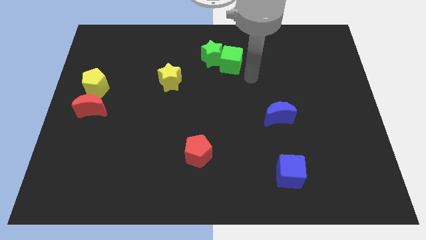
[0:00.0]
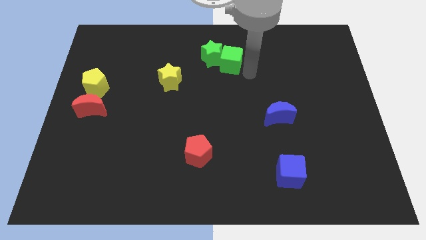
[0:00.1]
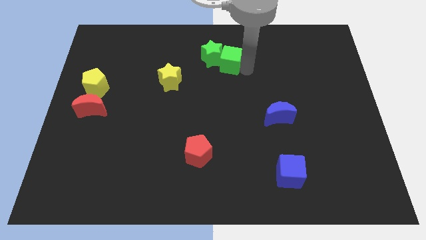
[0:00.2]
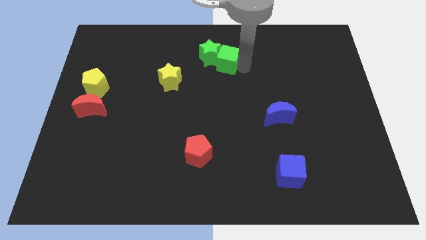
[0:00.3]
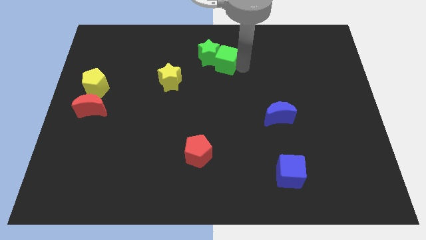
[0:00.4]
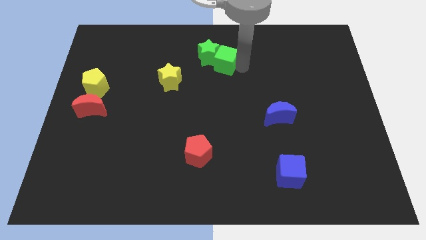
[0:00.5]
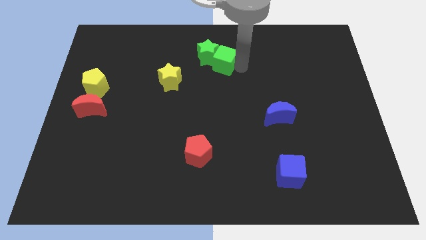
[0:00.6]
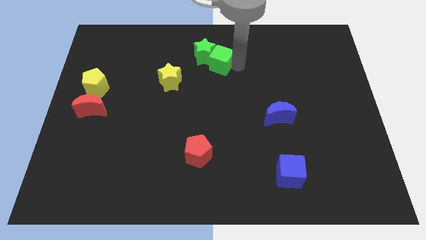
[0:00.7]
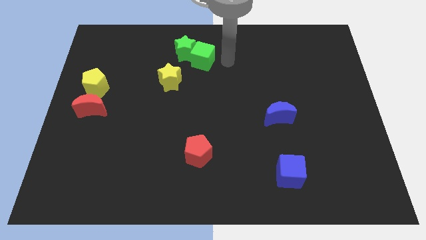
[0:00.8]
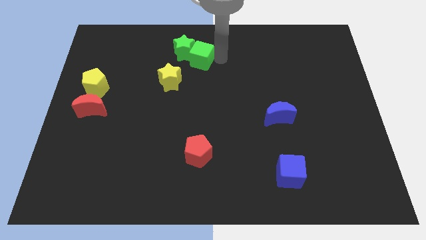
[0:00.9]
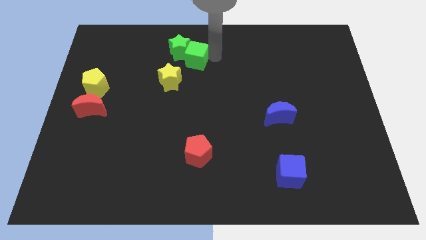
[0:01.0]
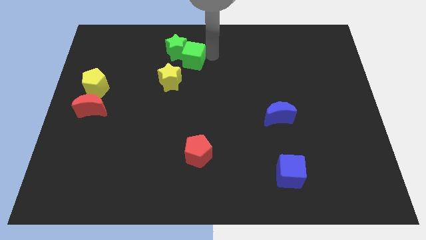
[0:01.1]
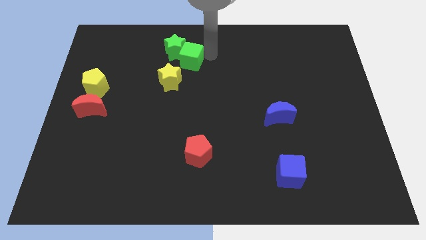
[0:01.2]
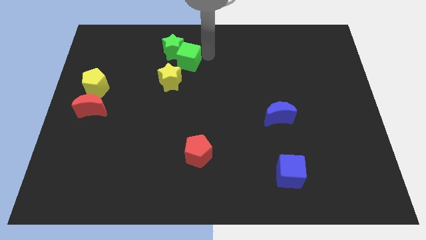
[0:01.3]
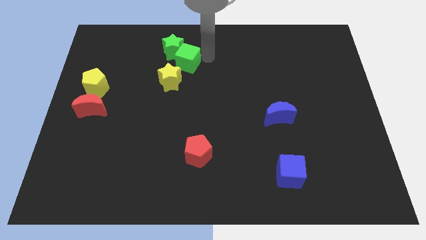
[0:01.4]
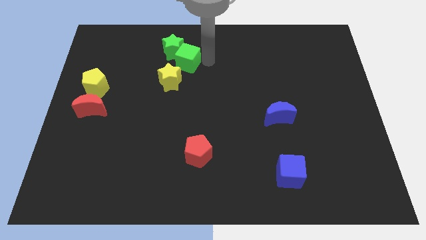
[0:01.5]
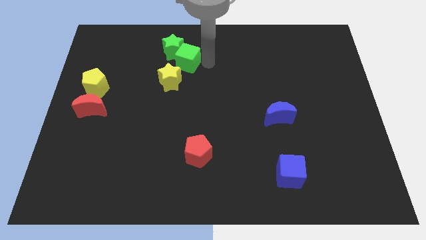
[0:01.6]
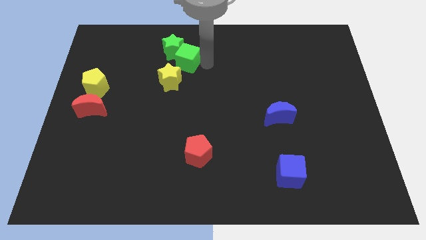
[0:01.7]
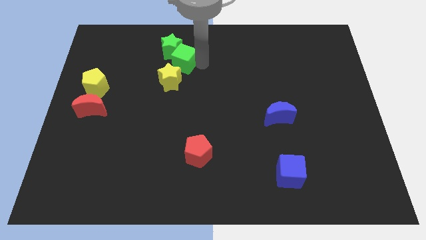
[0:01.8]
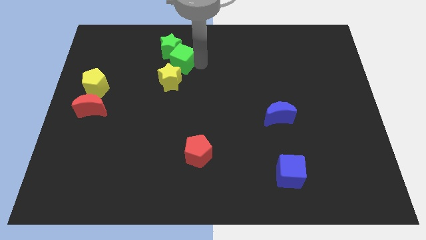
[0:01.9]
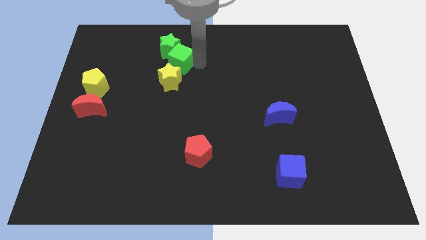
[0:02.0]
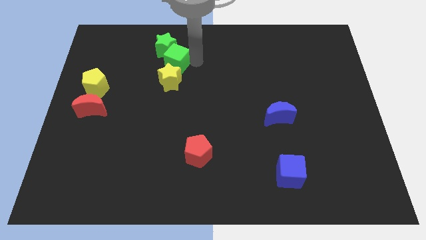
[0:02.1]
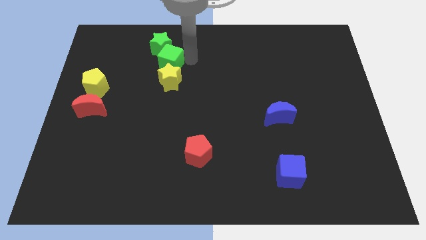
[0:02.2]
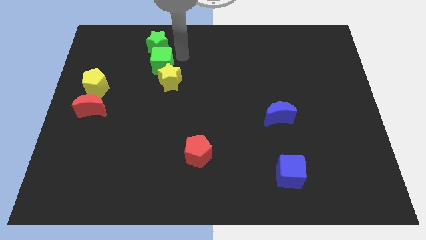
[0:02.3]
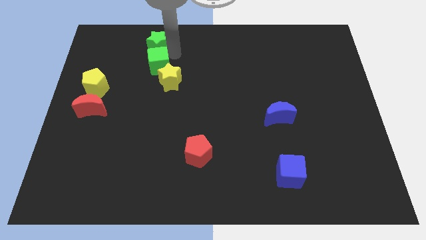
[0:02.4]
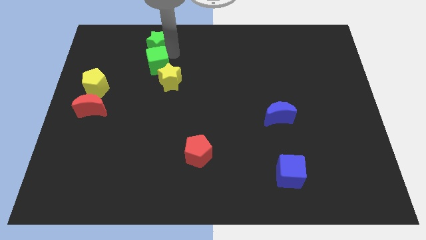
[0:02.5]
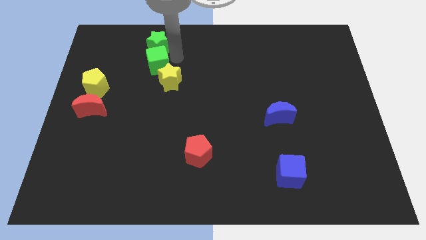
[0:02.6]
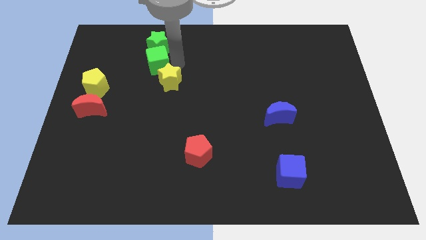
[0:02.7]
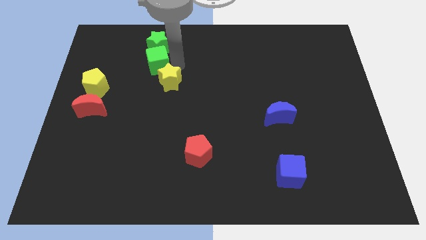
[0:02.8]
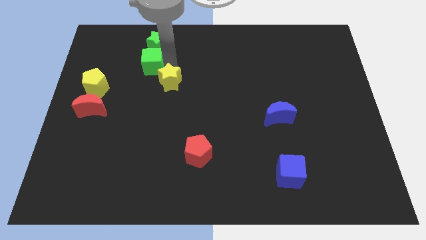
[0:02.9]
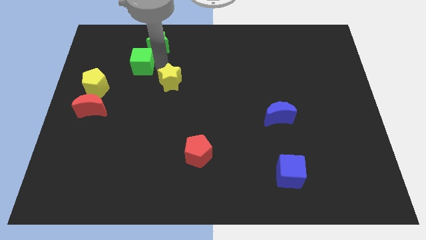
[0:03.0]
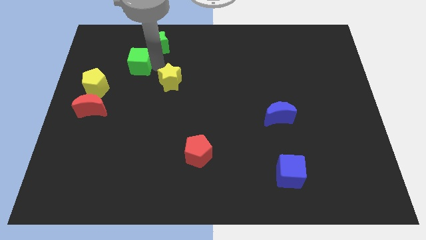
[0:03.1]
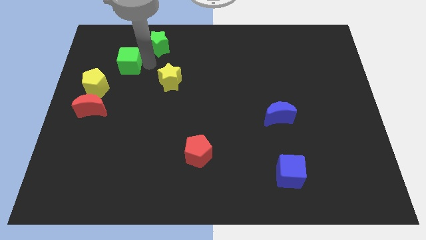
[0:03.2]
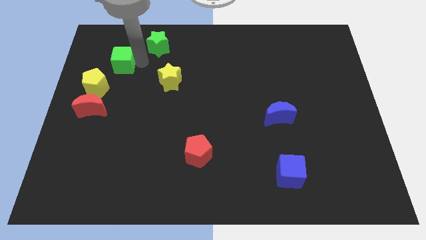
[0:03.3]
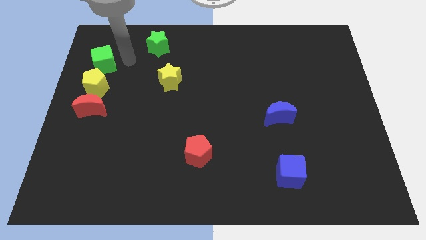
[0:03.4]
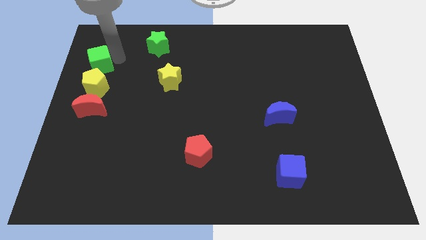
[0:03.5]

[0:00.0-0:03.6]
slide green cube above yellow pentagon

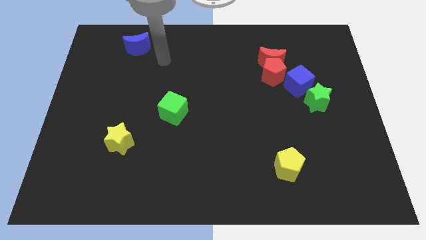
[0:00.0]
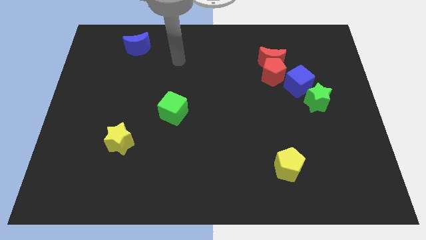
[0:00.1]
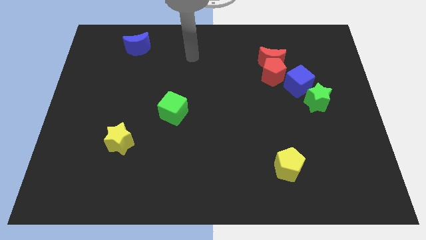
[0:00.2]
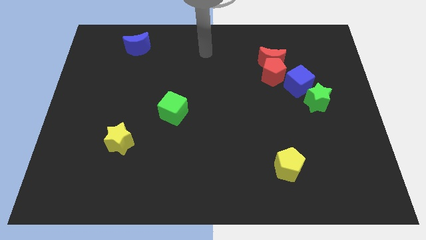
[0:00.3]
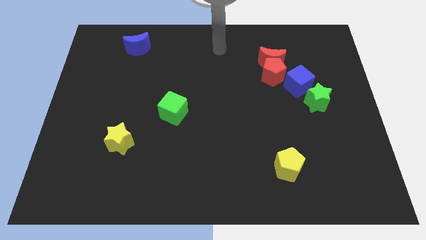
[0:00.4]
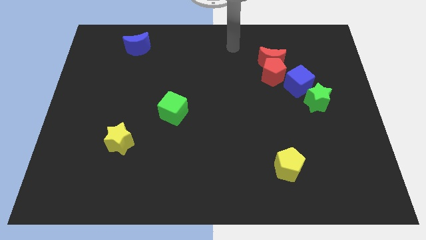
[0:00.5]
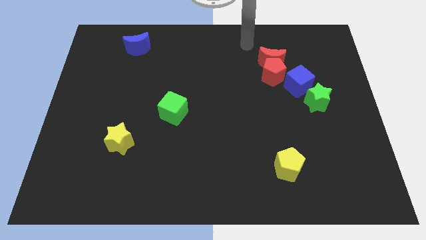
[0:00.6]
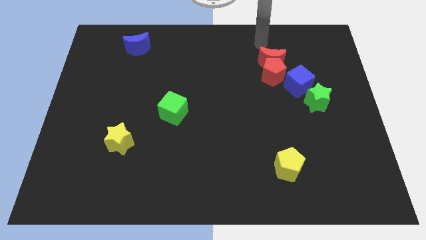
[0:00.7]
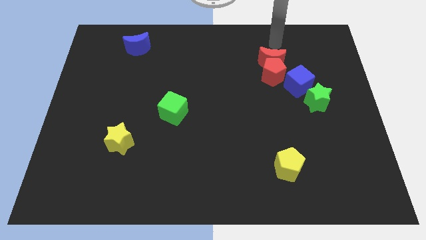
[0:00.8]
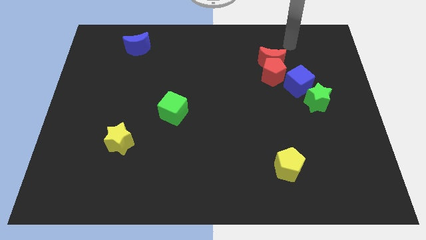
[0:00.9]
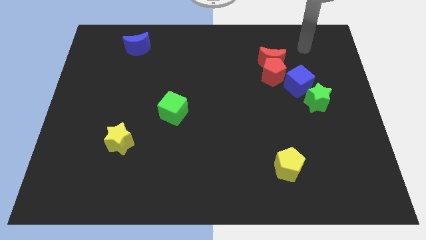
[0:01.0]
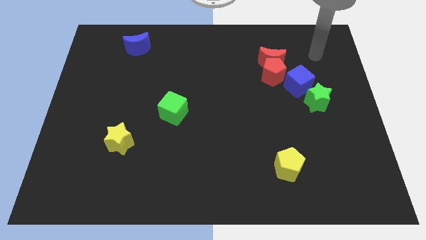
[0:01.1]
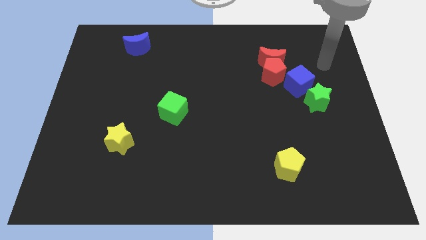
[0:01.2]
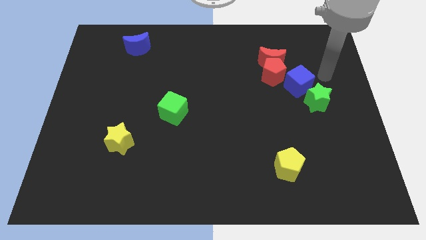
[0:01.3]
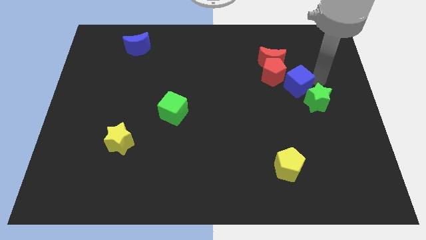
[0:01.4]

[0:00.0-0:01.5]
move your arm to the right of the blue cube

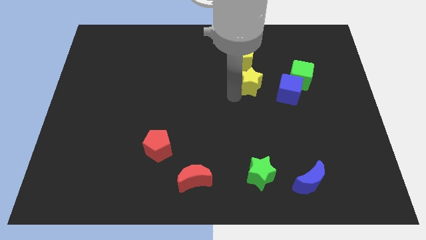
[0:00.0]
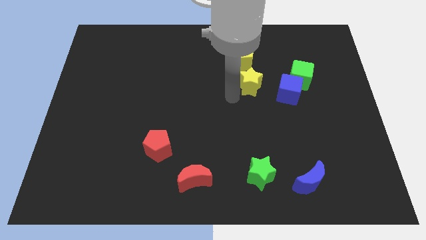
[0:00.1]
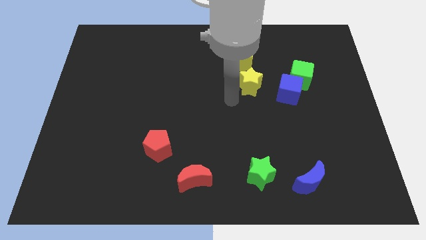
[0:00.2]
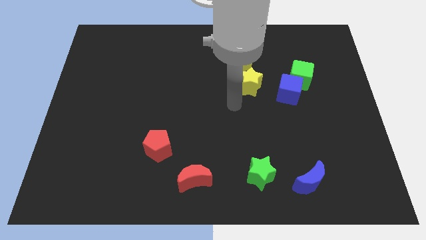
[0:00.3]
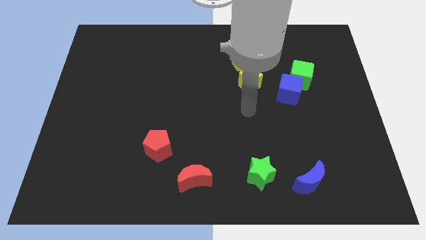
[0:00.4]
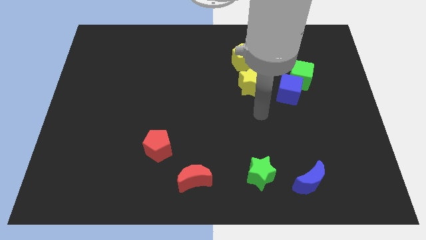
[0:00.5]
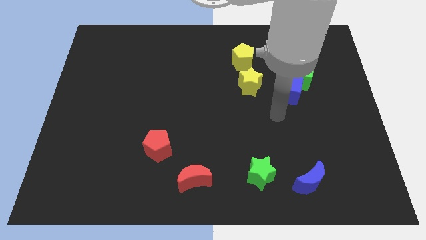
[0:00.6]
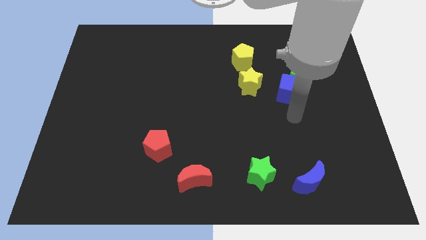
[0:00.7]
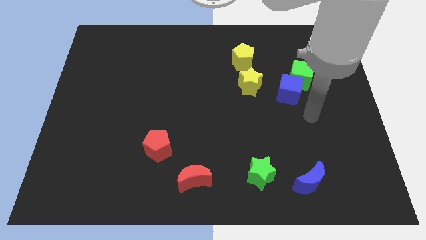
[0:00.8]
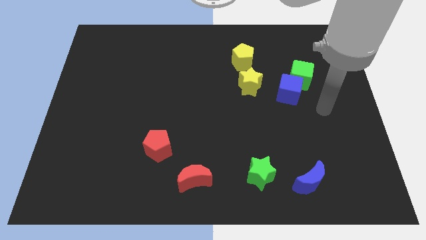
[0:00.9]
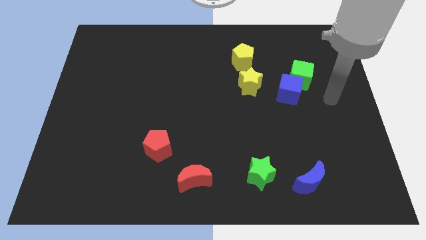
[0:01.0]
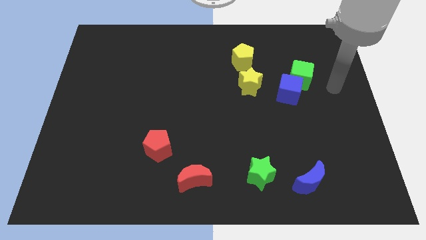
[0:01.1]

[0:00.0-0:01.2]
move your arm towards center right

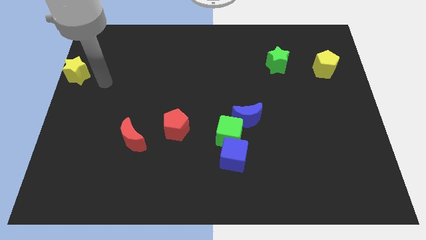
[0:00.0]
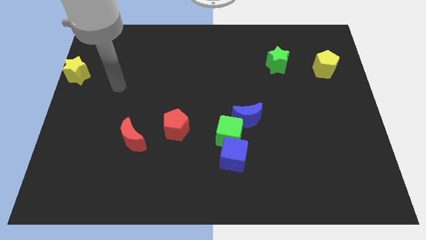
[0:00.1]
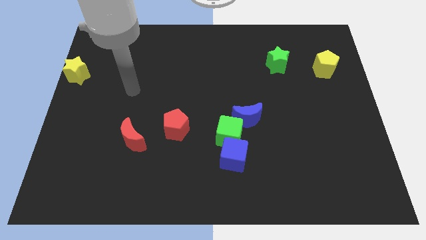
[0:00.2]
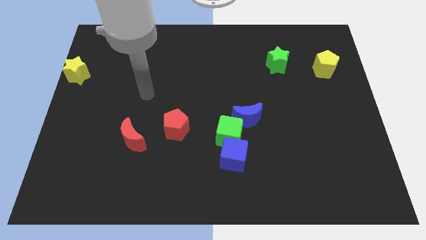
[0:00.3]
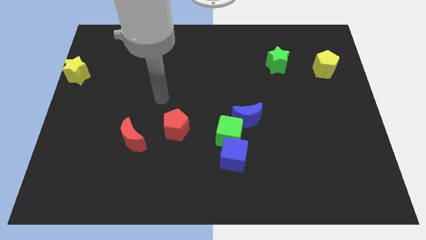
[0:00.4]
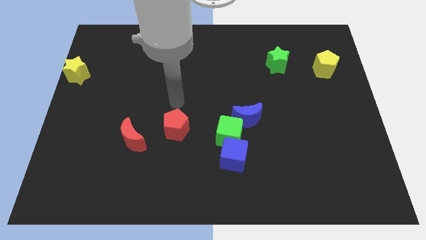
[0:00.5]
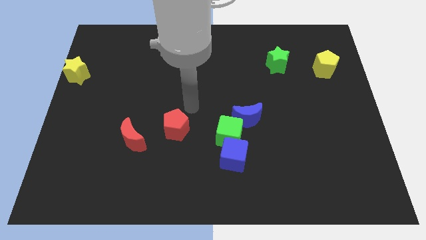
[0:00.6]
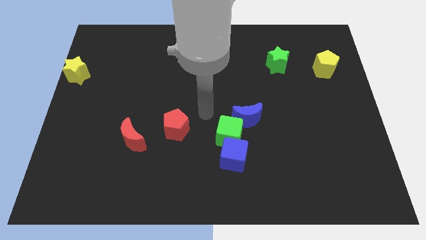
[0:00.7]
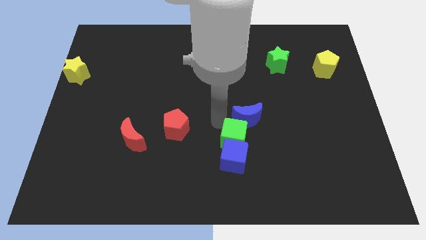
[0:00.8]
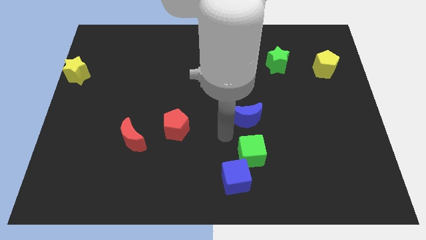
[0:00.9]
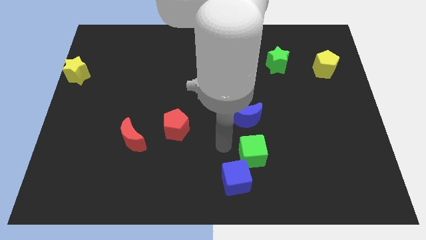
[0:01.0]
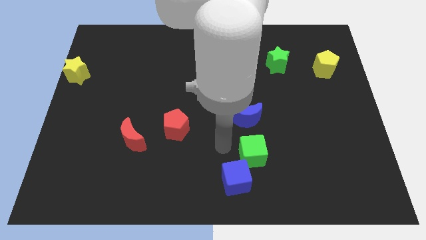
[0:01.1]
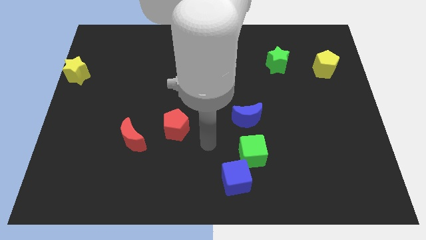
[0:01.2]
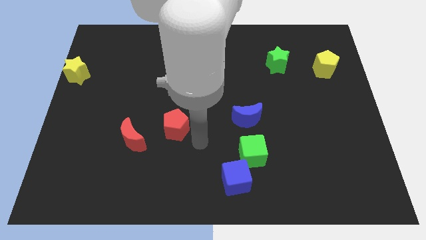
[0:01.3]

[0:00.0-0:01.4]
push the blue cube with the green cube

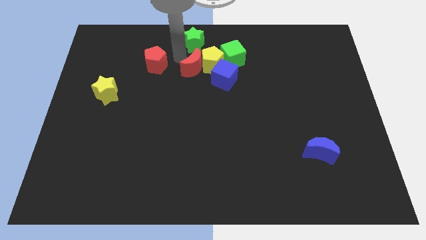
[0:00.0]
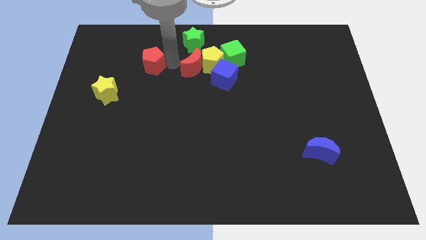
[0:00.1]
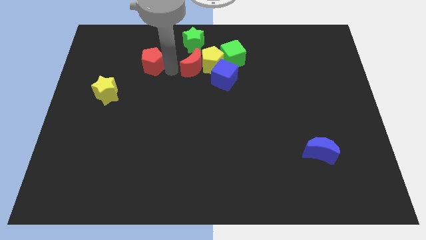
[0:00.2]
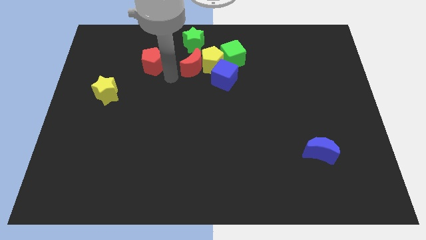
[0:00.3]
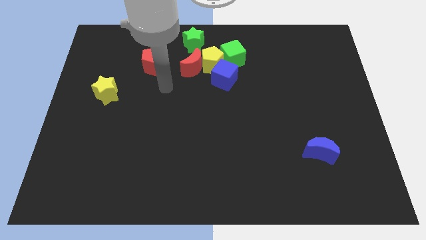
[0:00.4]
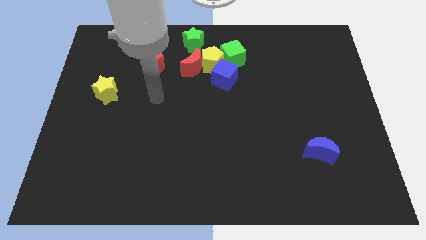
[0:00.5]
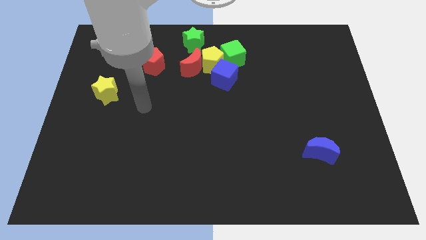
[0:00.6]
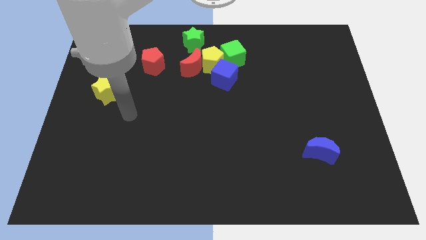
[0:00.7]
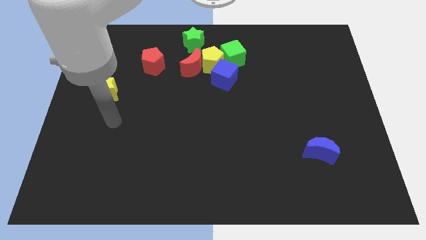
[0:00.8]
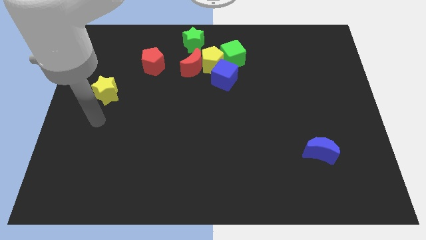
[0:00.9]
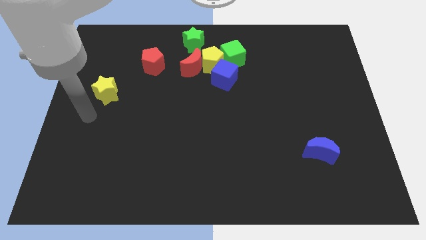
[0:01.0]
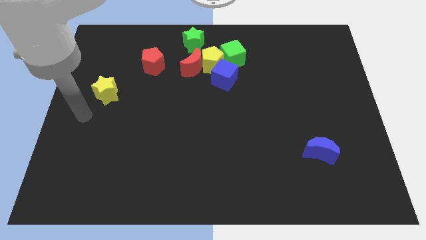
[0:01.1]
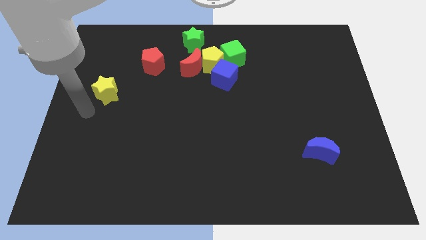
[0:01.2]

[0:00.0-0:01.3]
move the arm to the bottom left of the yellow star

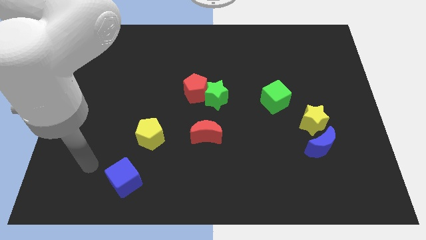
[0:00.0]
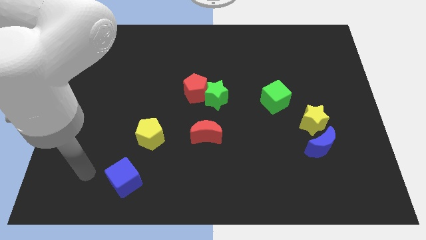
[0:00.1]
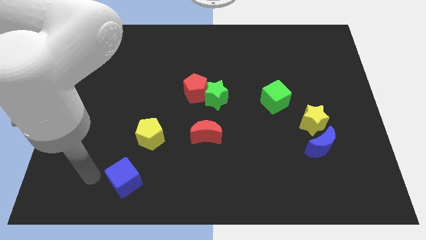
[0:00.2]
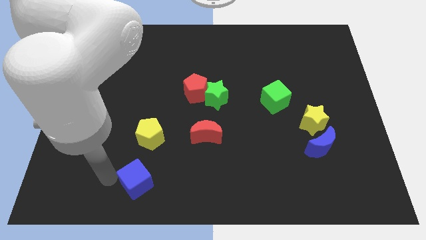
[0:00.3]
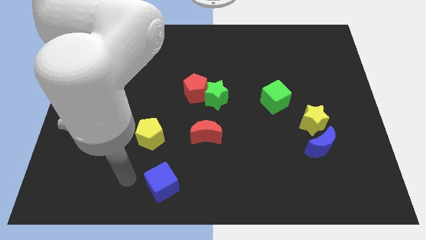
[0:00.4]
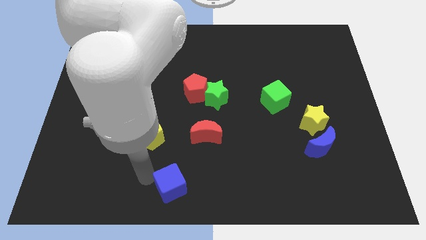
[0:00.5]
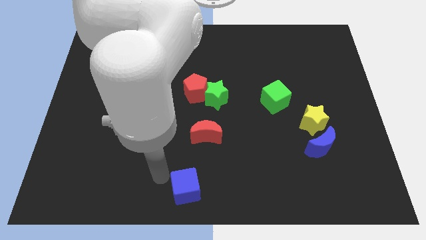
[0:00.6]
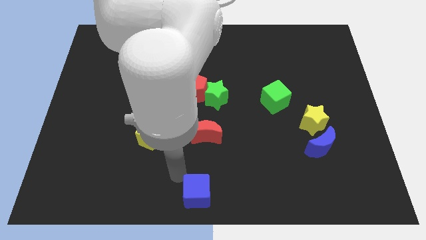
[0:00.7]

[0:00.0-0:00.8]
move blue cube to bottom center
